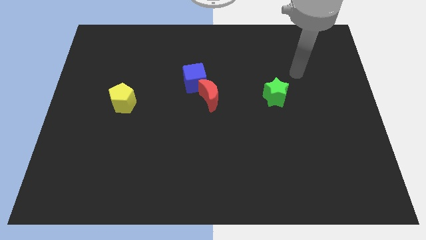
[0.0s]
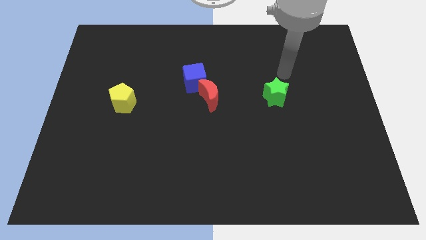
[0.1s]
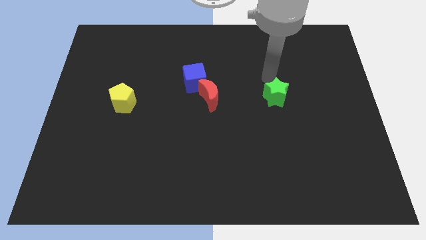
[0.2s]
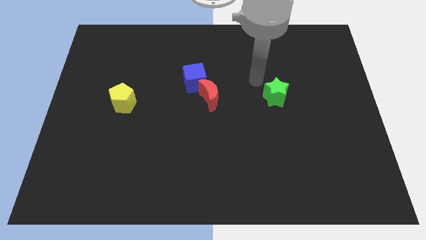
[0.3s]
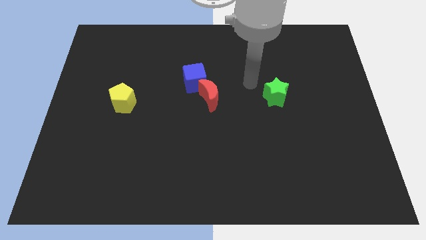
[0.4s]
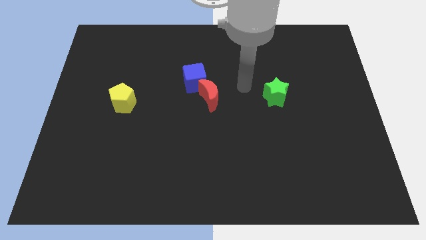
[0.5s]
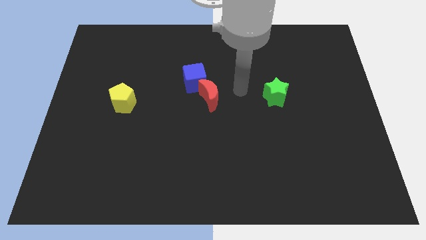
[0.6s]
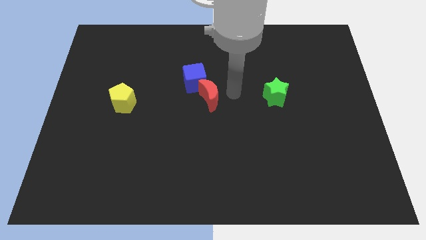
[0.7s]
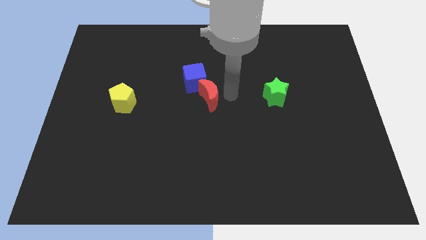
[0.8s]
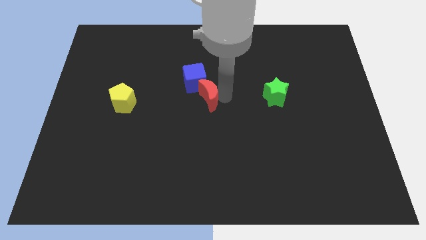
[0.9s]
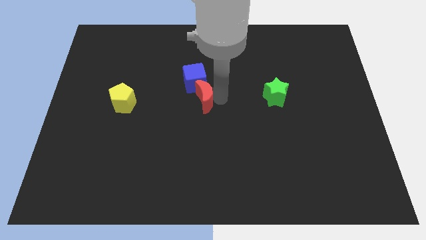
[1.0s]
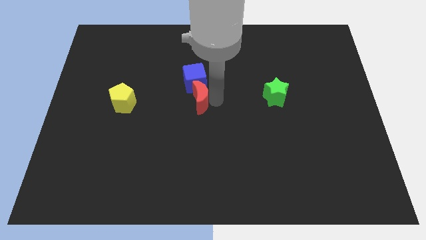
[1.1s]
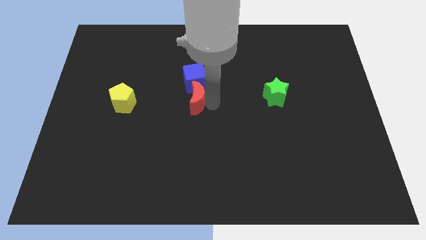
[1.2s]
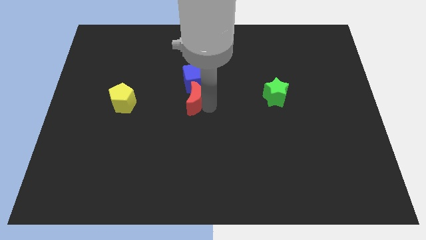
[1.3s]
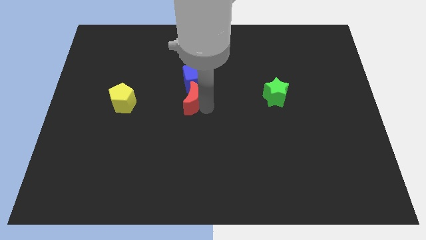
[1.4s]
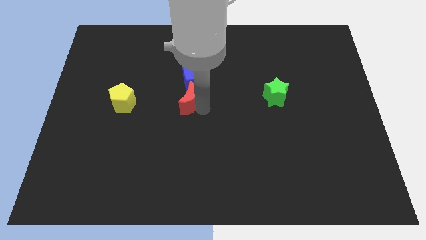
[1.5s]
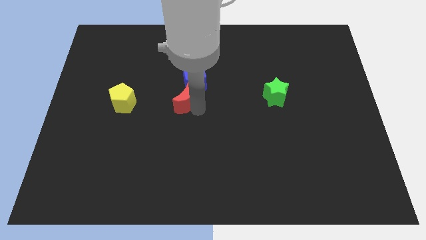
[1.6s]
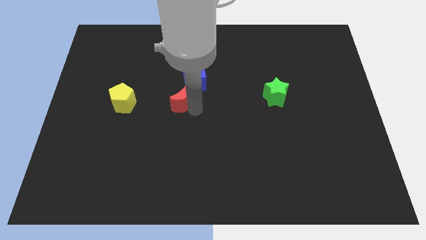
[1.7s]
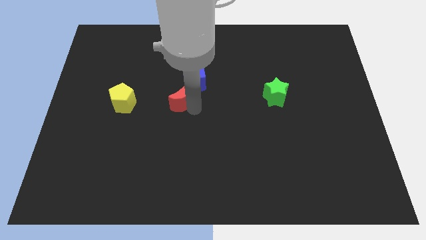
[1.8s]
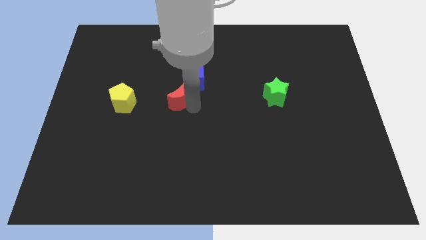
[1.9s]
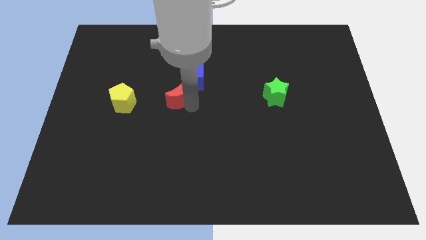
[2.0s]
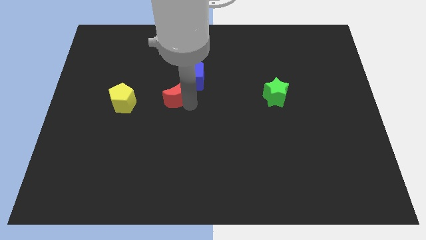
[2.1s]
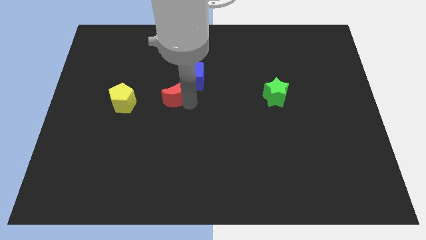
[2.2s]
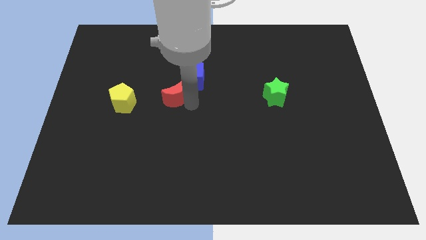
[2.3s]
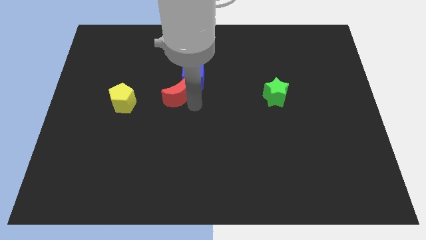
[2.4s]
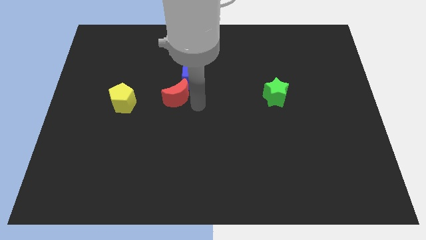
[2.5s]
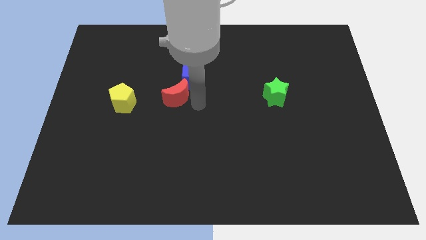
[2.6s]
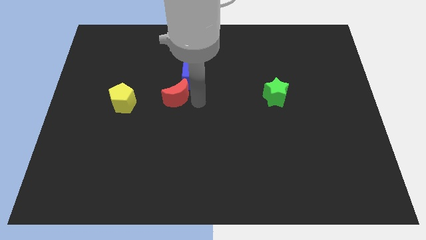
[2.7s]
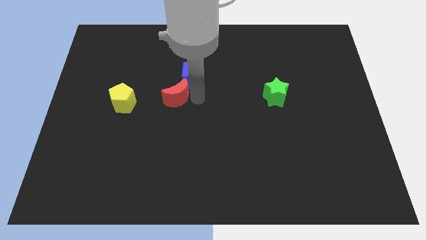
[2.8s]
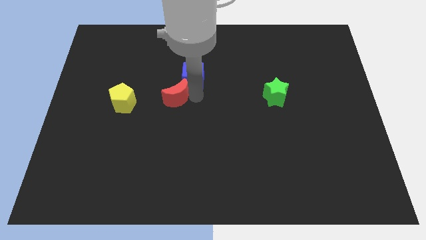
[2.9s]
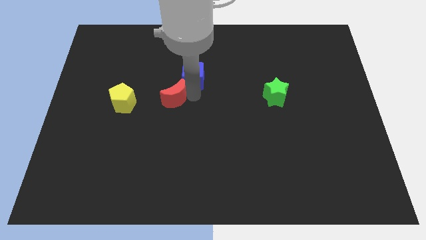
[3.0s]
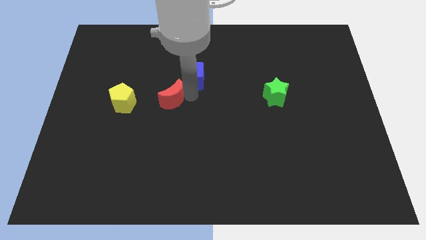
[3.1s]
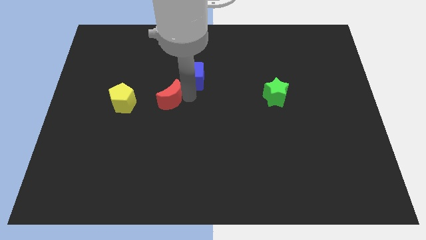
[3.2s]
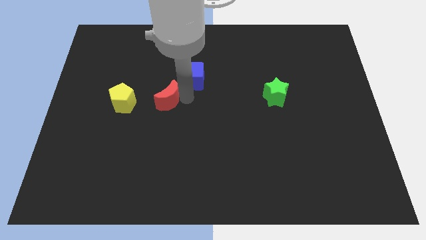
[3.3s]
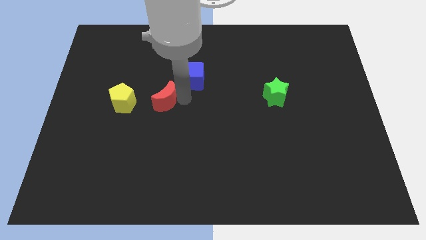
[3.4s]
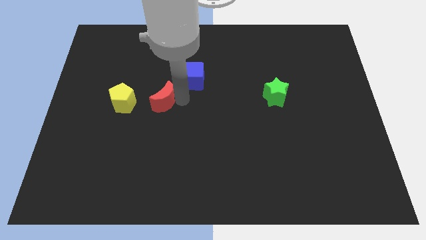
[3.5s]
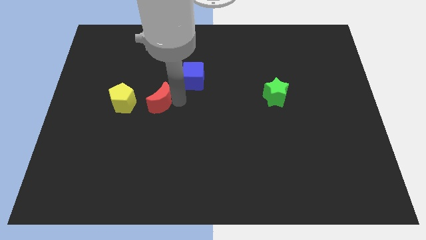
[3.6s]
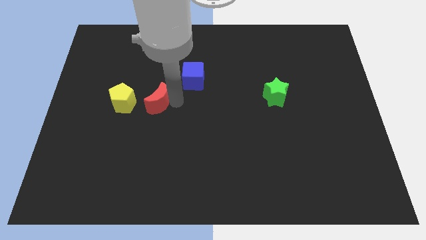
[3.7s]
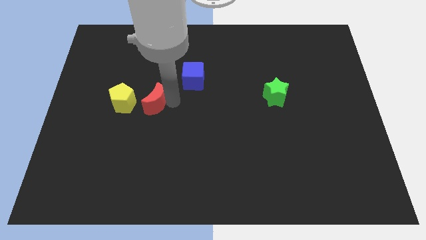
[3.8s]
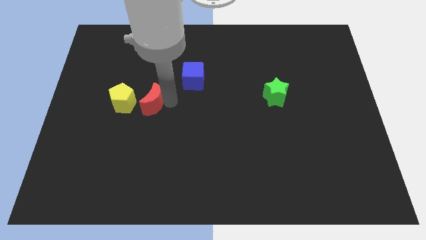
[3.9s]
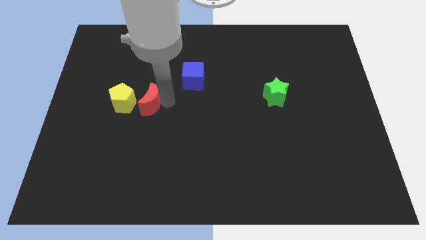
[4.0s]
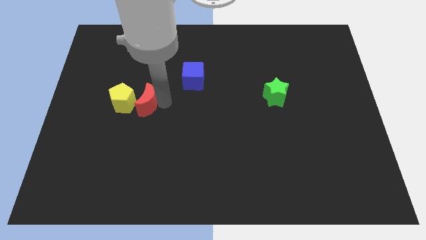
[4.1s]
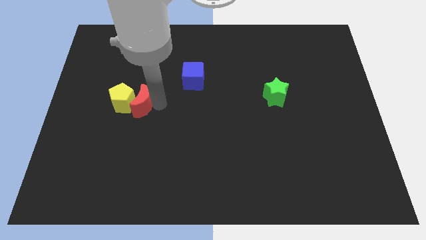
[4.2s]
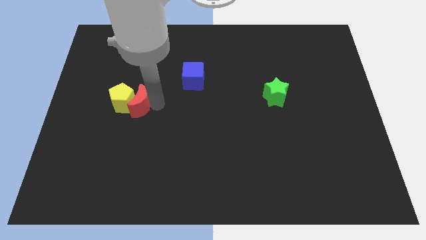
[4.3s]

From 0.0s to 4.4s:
move the red block towards the yellow pentagon

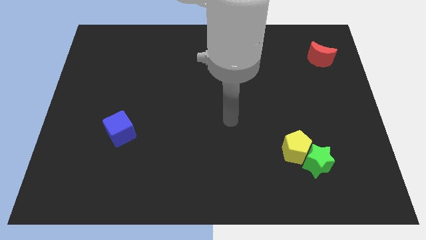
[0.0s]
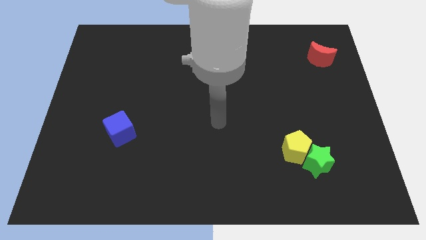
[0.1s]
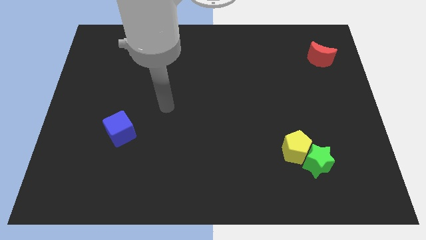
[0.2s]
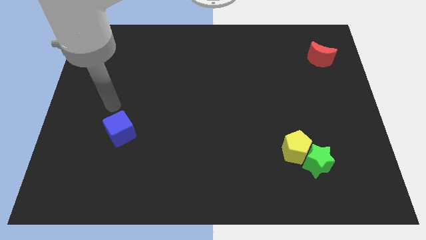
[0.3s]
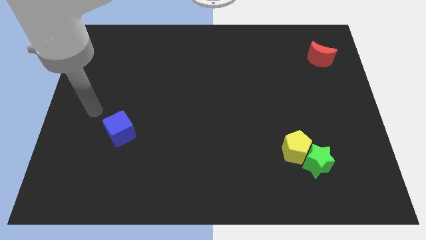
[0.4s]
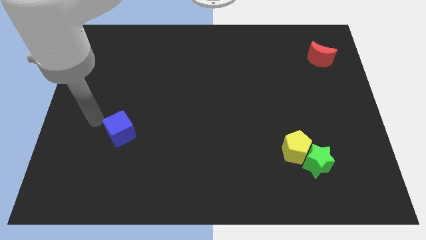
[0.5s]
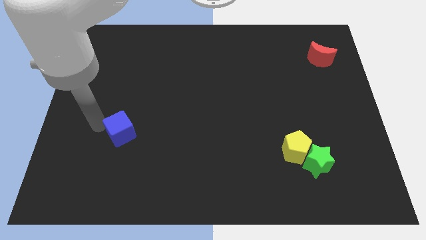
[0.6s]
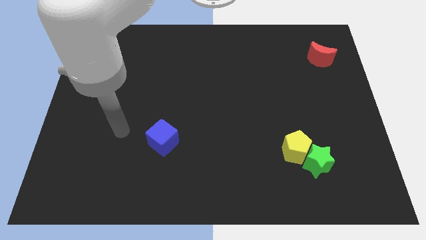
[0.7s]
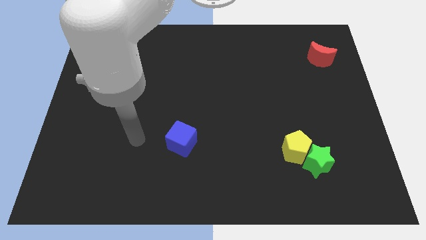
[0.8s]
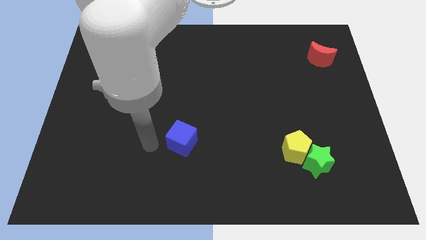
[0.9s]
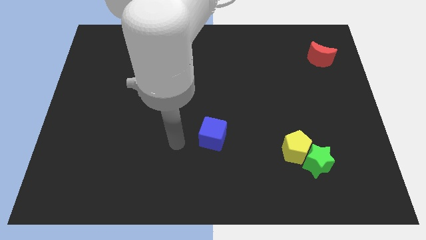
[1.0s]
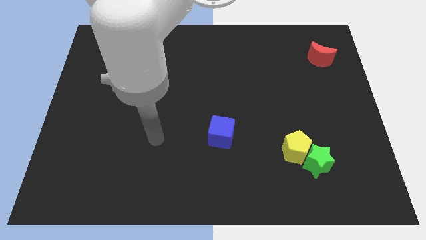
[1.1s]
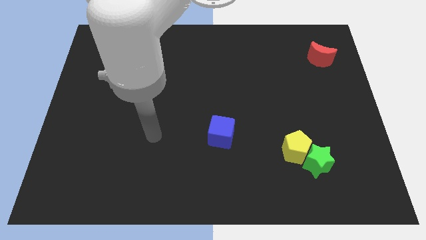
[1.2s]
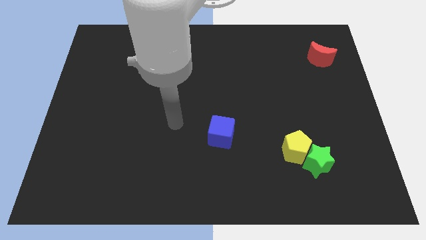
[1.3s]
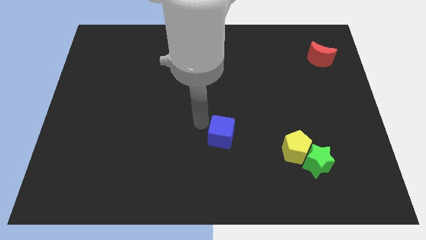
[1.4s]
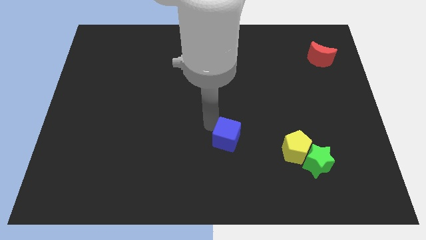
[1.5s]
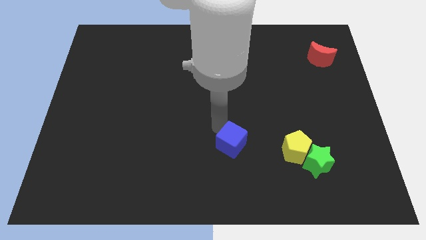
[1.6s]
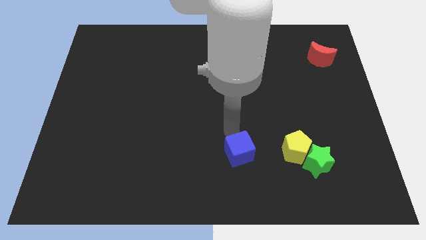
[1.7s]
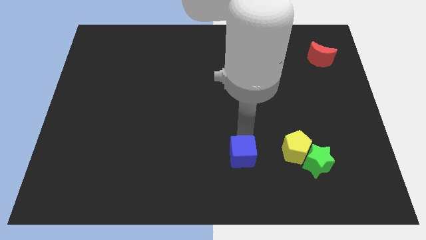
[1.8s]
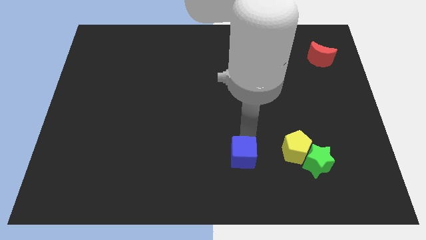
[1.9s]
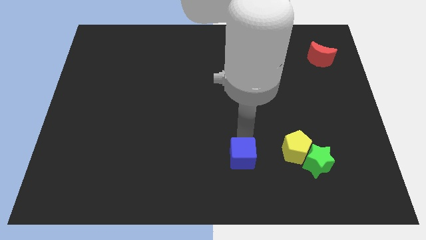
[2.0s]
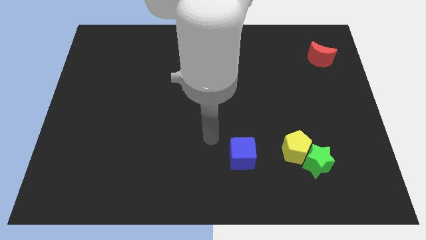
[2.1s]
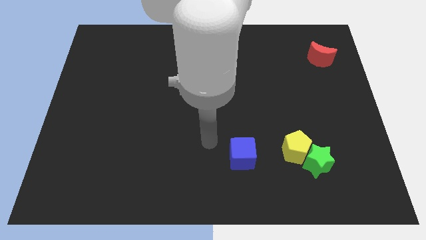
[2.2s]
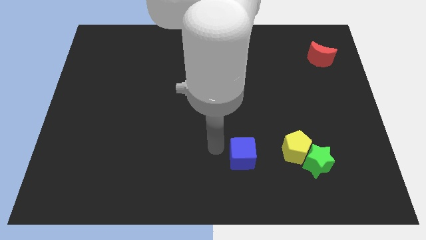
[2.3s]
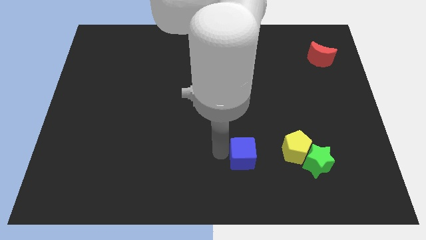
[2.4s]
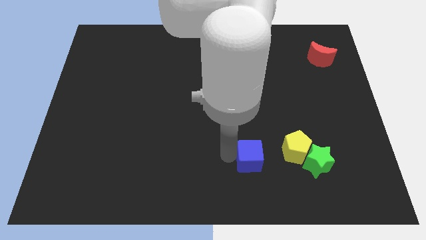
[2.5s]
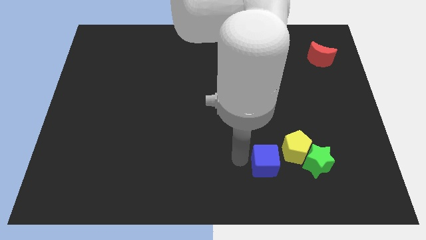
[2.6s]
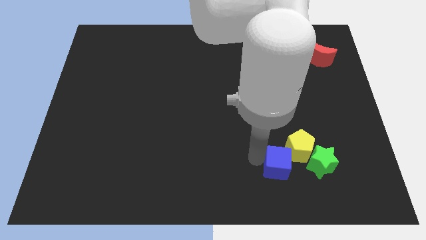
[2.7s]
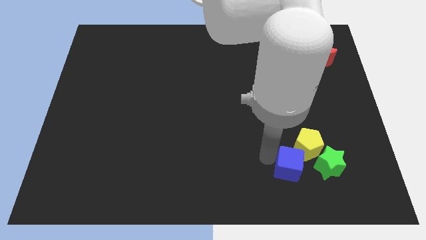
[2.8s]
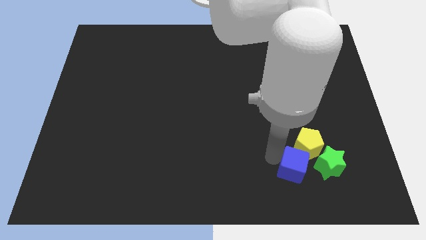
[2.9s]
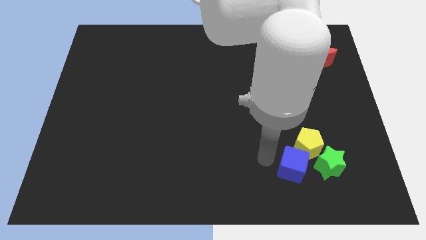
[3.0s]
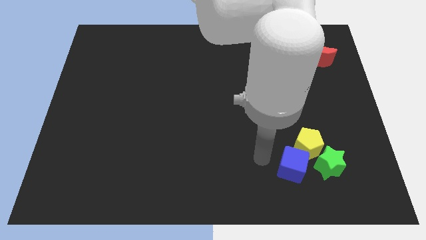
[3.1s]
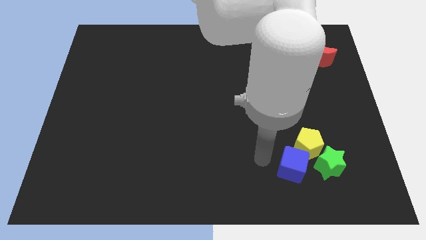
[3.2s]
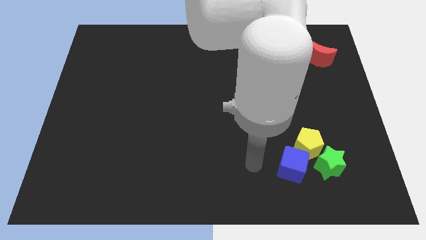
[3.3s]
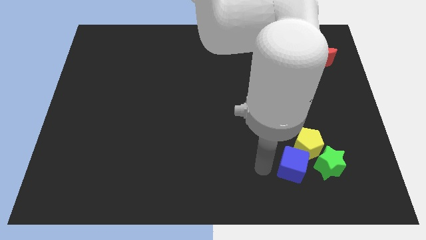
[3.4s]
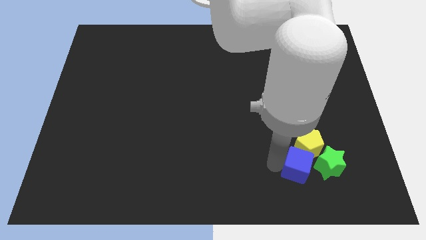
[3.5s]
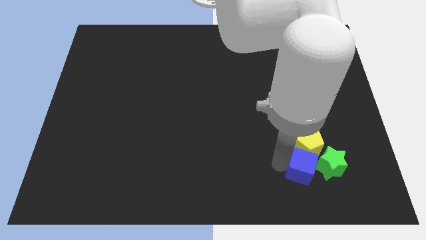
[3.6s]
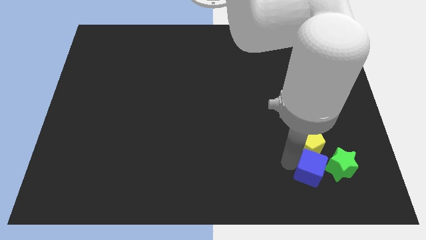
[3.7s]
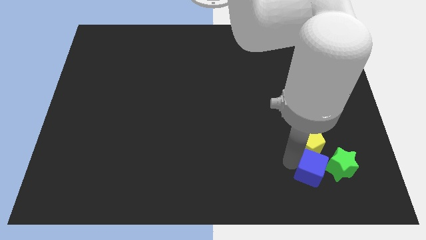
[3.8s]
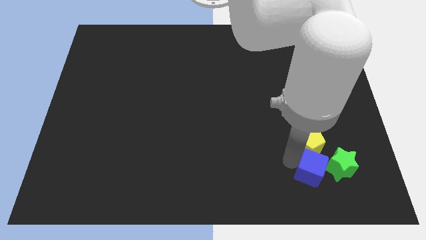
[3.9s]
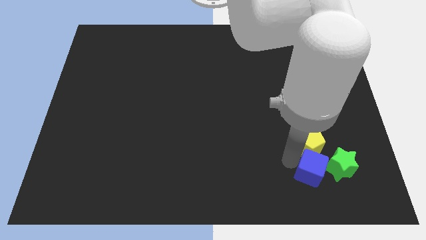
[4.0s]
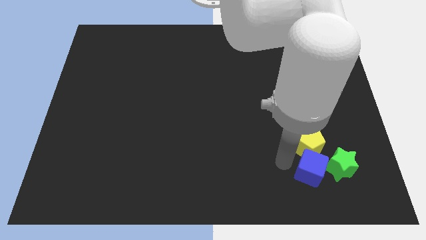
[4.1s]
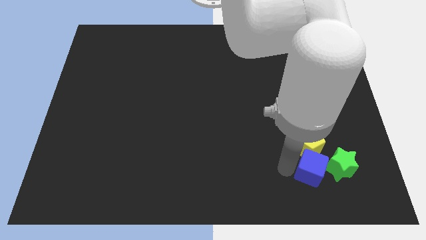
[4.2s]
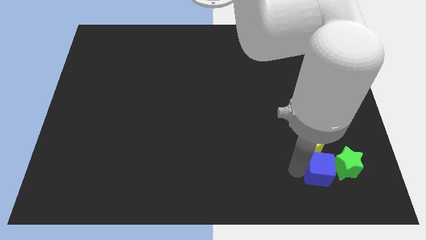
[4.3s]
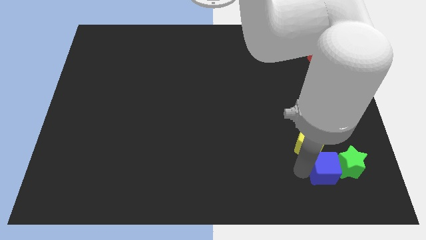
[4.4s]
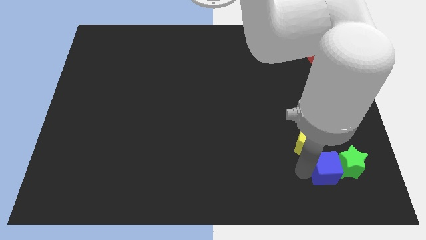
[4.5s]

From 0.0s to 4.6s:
slide the cube towards the star
